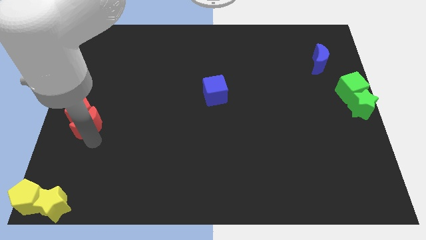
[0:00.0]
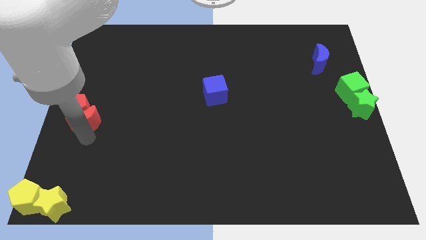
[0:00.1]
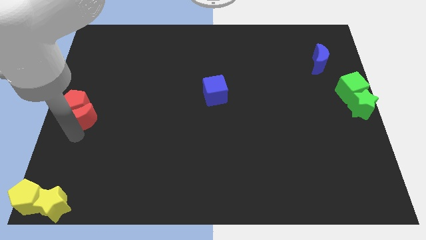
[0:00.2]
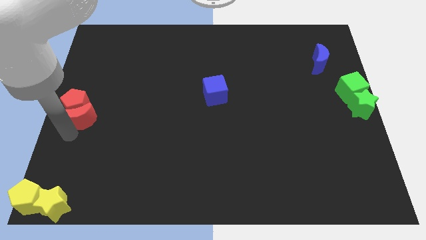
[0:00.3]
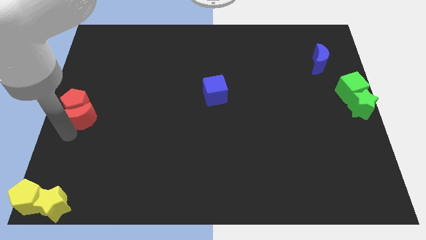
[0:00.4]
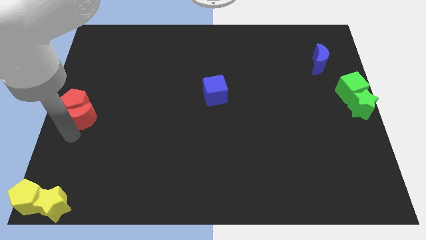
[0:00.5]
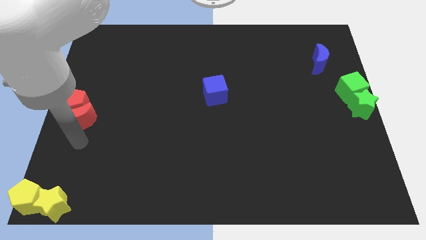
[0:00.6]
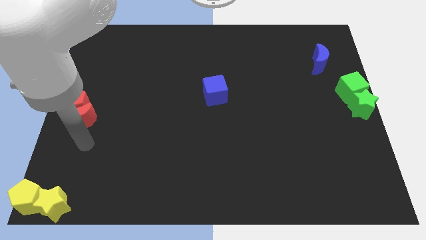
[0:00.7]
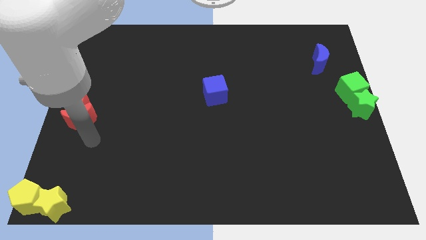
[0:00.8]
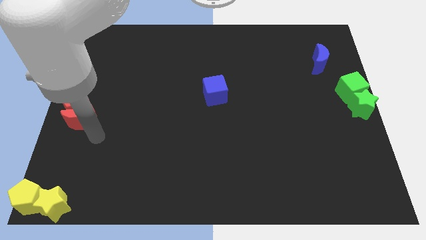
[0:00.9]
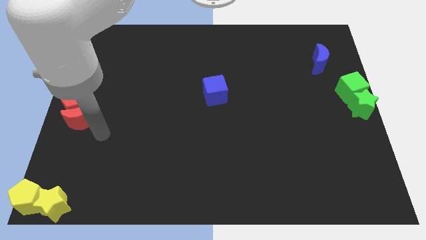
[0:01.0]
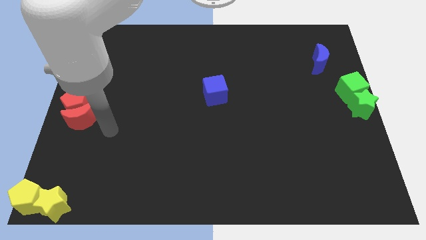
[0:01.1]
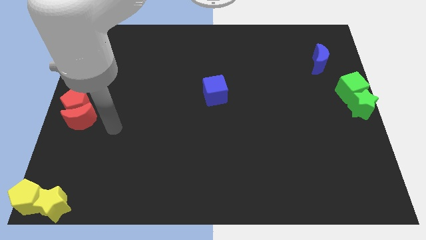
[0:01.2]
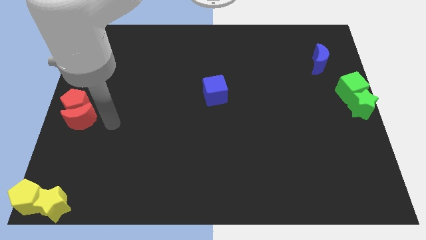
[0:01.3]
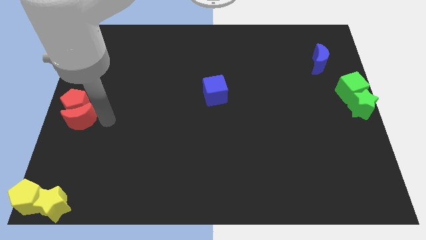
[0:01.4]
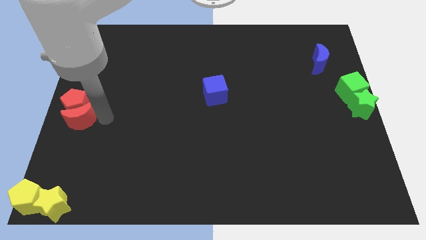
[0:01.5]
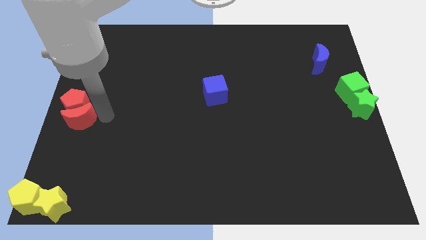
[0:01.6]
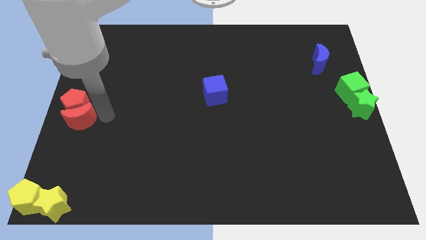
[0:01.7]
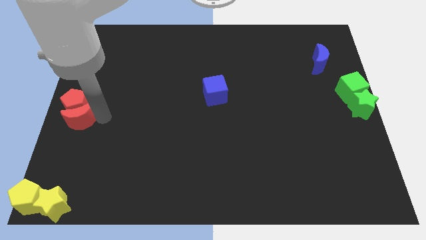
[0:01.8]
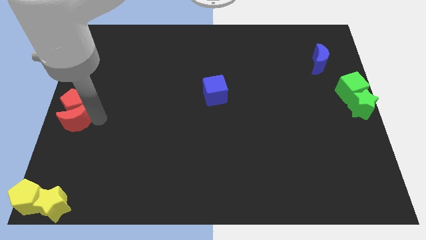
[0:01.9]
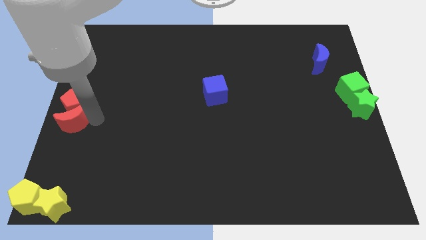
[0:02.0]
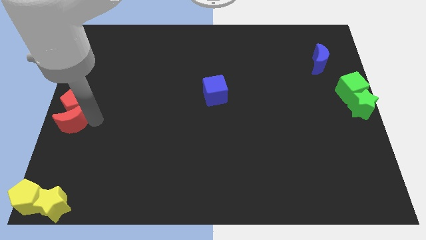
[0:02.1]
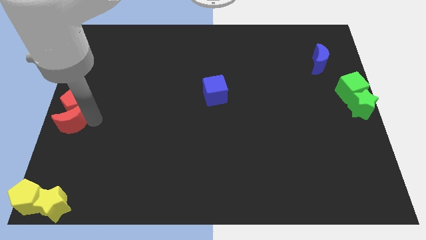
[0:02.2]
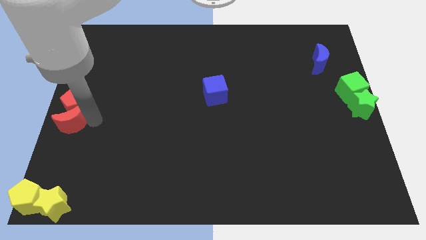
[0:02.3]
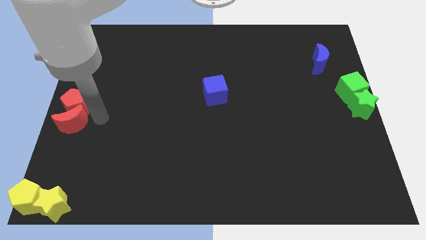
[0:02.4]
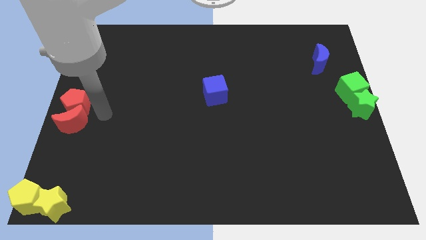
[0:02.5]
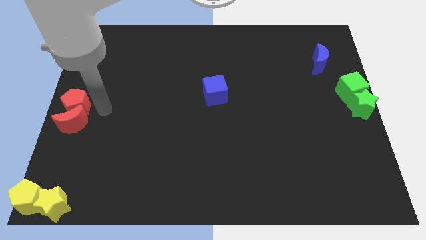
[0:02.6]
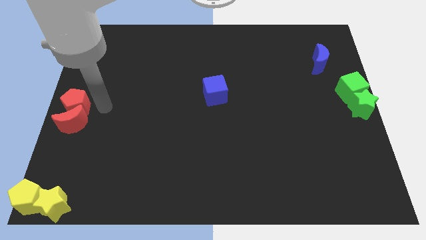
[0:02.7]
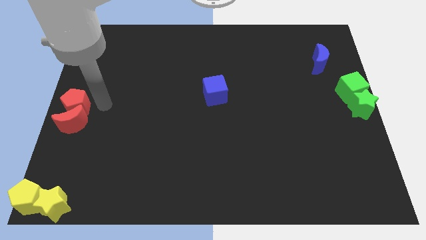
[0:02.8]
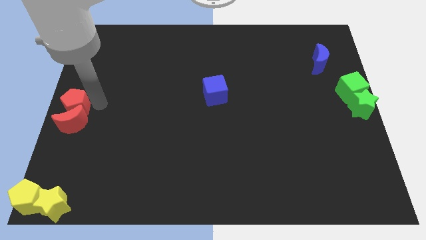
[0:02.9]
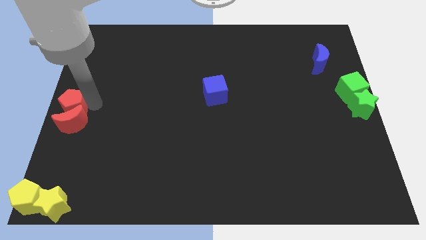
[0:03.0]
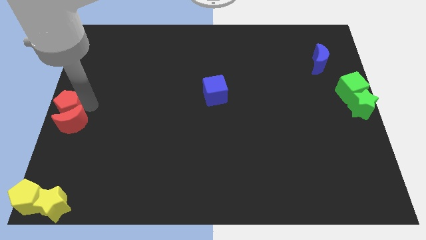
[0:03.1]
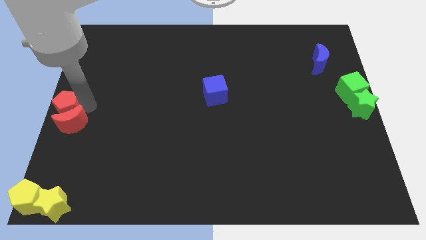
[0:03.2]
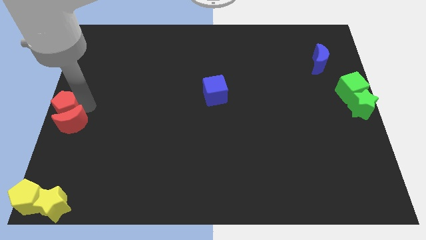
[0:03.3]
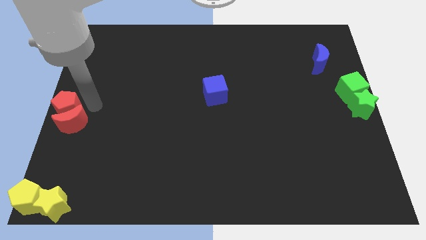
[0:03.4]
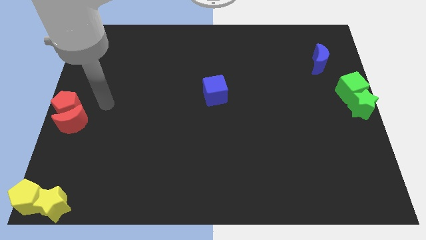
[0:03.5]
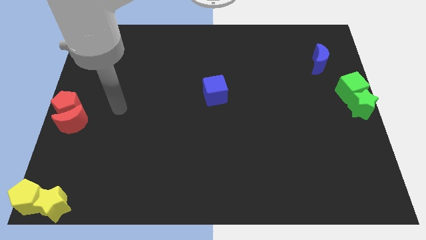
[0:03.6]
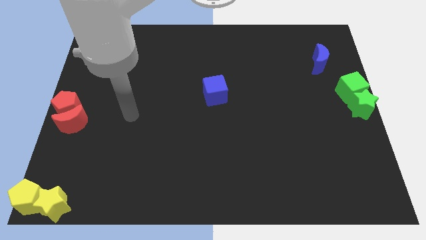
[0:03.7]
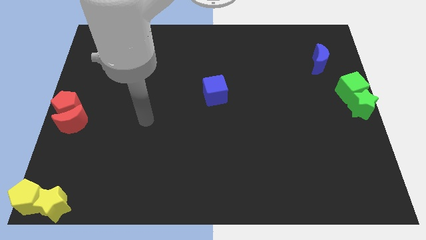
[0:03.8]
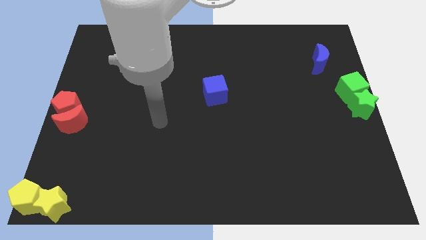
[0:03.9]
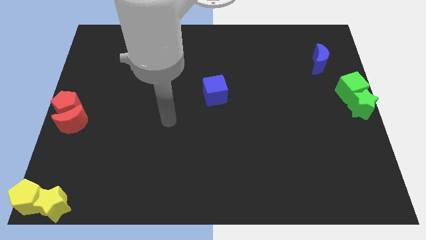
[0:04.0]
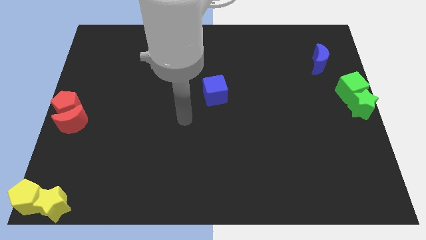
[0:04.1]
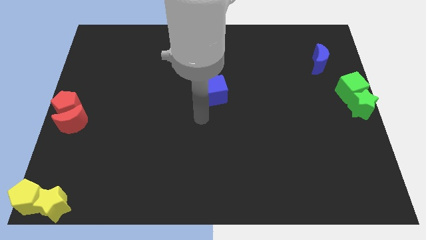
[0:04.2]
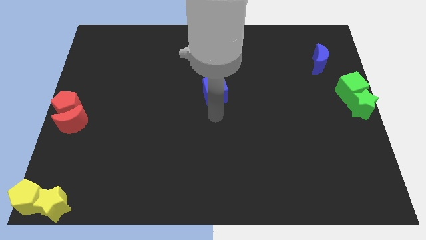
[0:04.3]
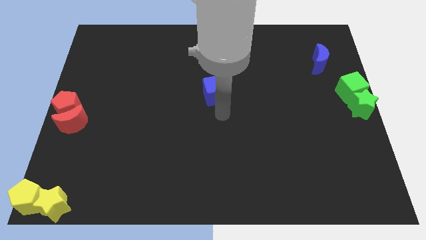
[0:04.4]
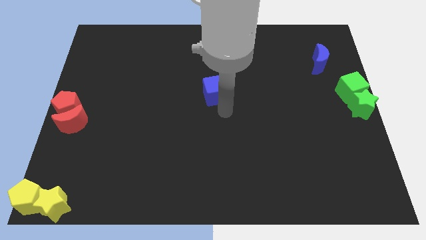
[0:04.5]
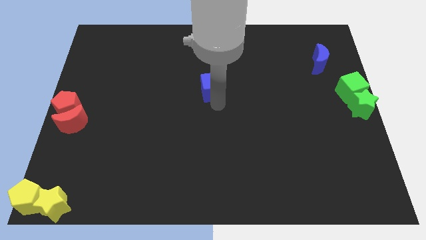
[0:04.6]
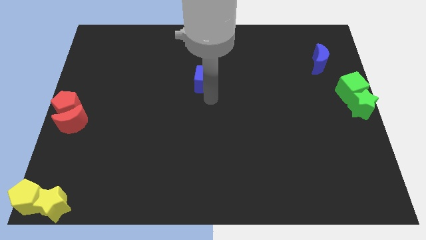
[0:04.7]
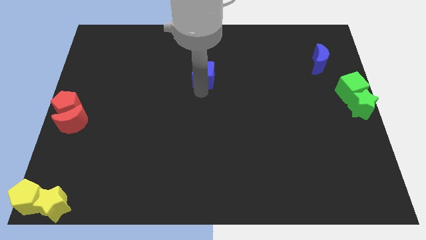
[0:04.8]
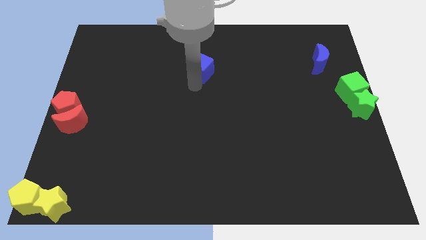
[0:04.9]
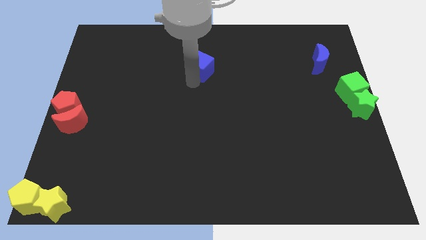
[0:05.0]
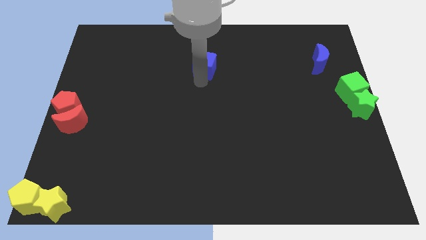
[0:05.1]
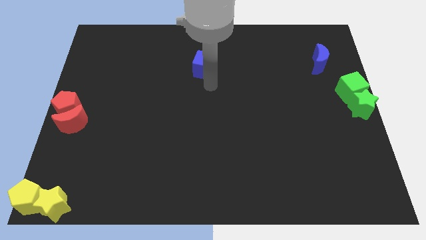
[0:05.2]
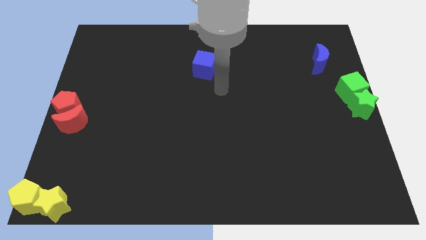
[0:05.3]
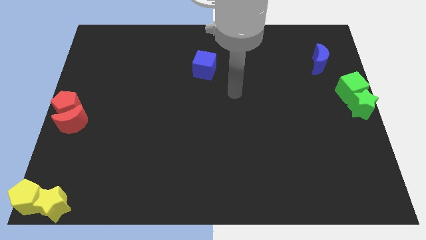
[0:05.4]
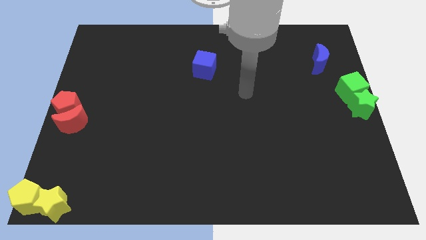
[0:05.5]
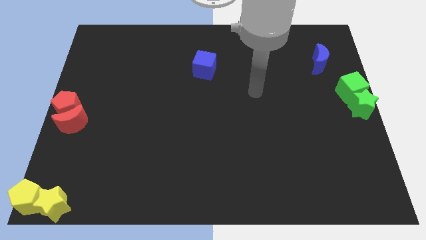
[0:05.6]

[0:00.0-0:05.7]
push the red pentagonred crescent towards the center left side of the board

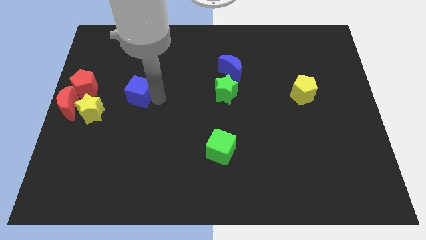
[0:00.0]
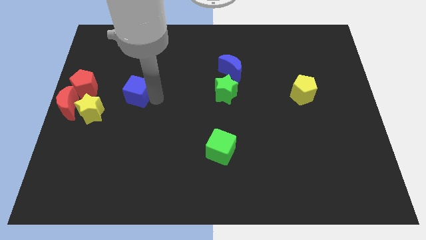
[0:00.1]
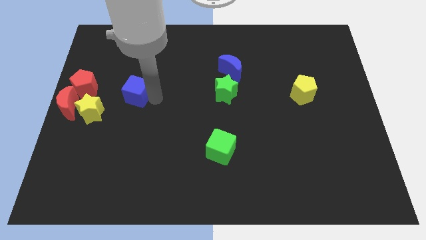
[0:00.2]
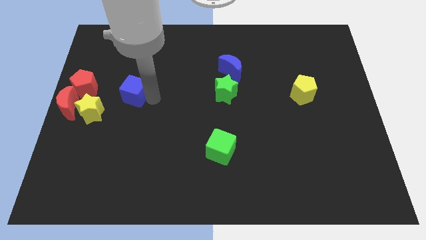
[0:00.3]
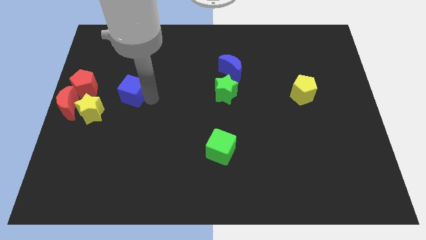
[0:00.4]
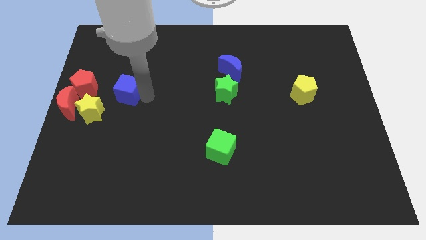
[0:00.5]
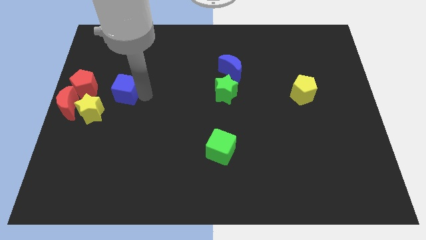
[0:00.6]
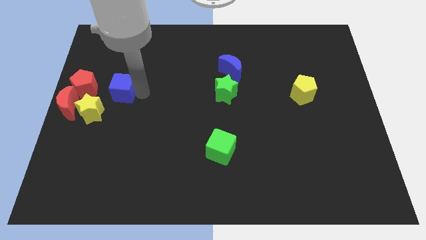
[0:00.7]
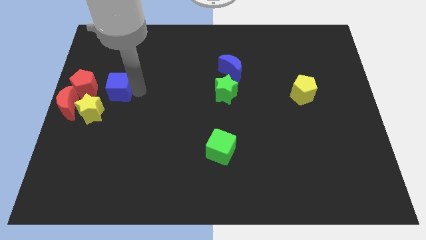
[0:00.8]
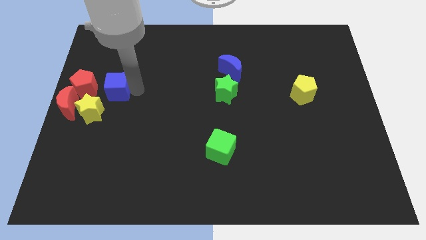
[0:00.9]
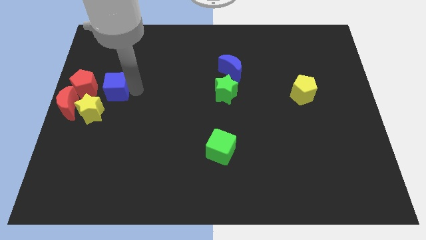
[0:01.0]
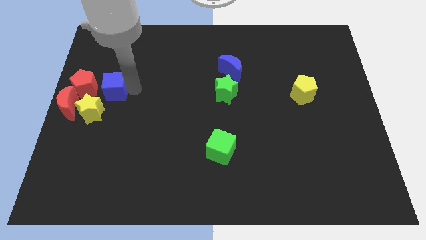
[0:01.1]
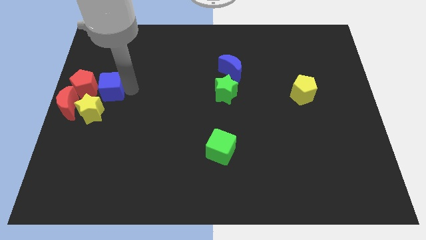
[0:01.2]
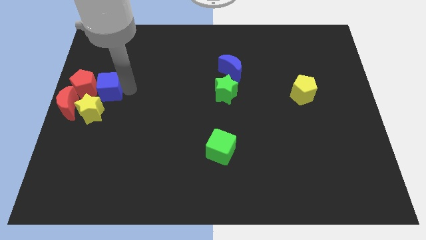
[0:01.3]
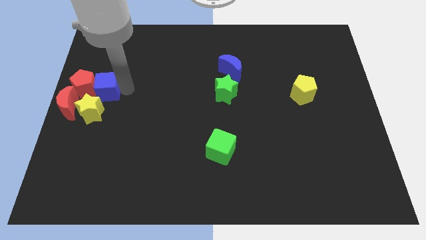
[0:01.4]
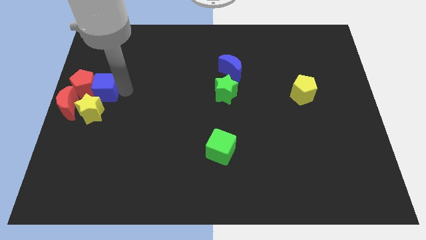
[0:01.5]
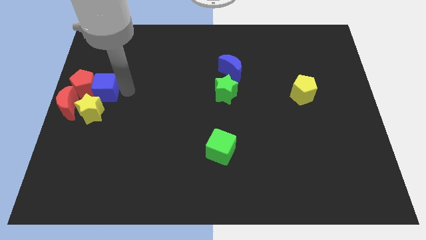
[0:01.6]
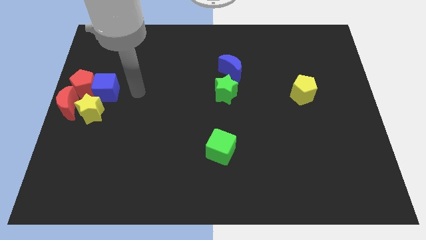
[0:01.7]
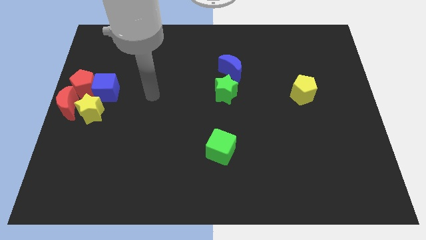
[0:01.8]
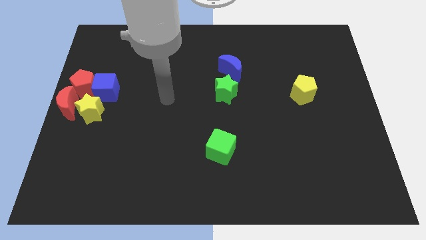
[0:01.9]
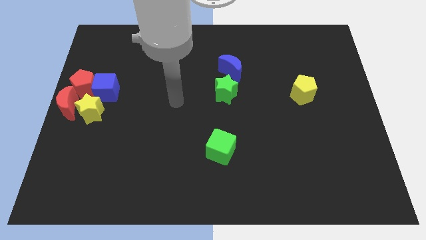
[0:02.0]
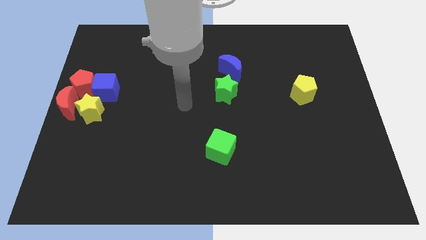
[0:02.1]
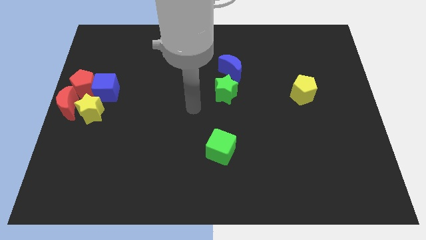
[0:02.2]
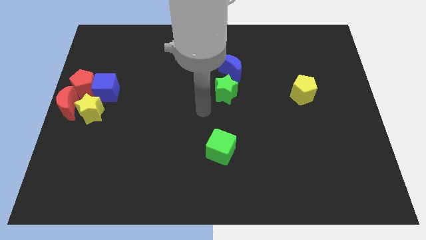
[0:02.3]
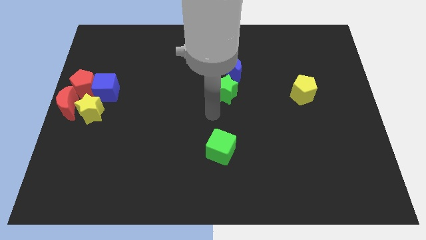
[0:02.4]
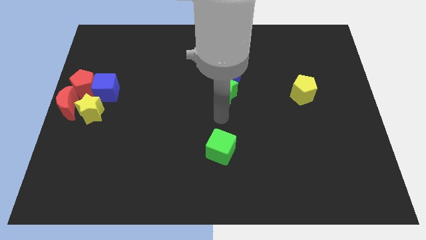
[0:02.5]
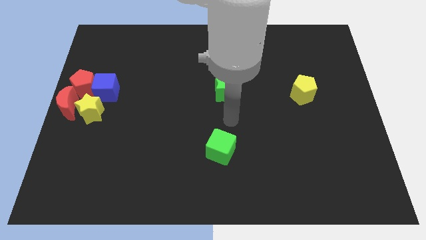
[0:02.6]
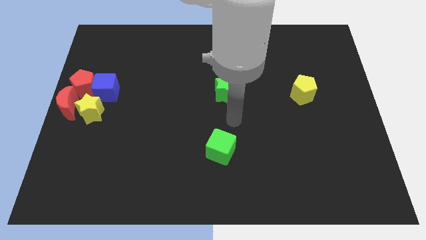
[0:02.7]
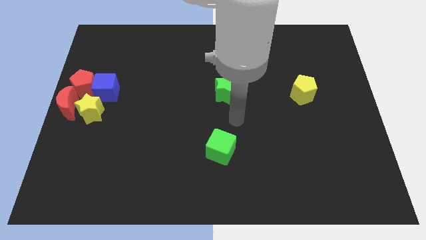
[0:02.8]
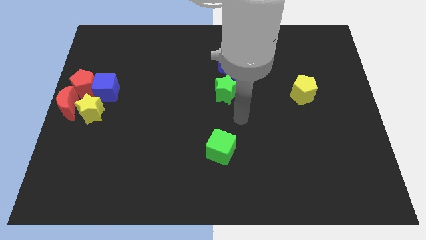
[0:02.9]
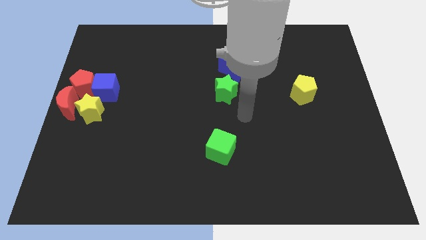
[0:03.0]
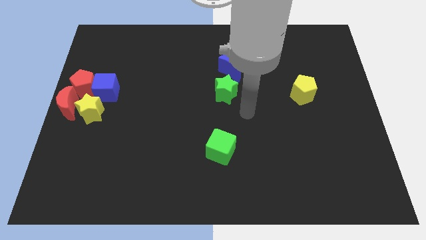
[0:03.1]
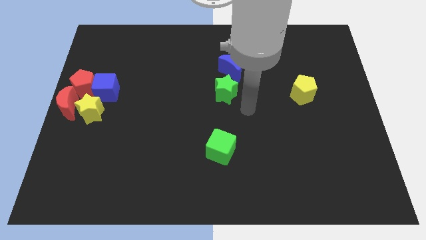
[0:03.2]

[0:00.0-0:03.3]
move the blue cube close to the right side of the red pentagon
